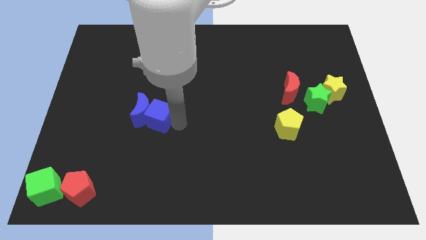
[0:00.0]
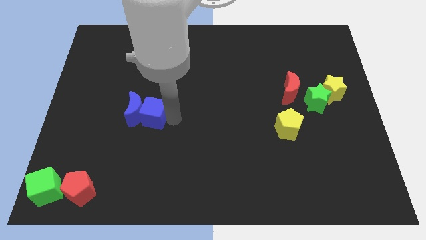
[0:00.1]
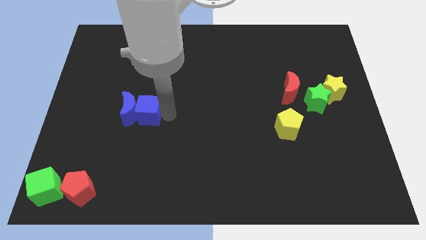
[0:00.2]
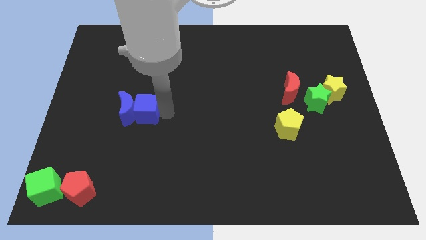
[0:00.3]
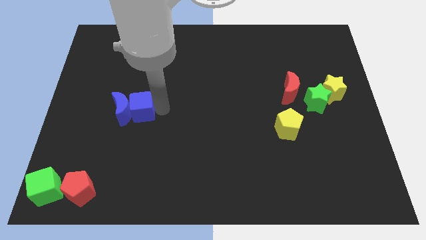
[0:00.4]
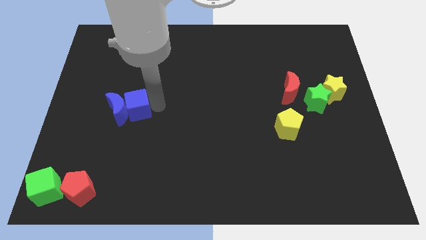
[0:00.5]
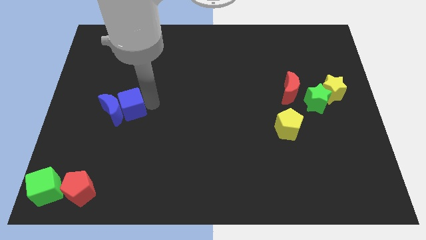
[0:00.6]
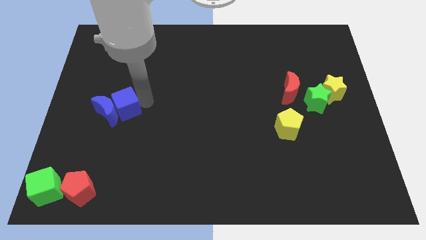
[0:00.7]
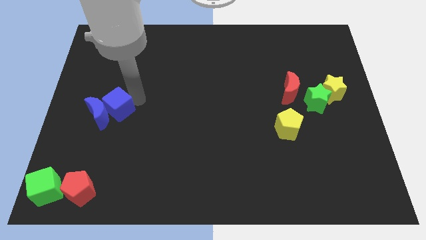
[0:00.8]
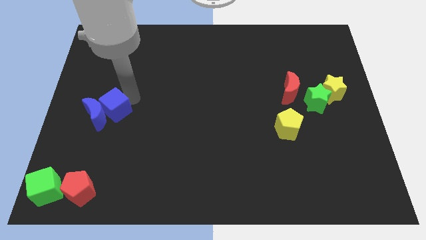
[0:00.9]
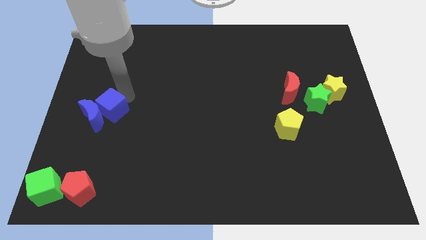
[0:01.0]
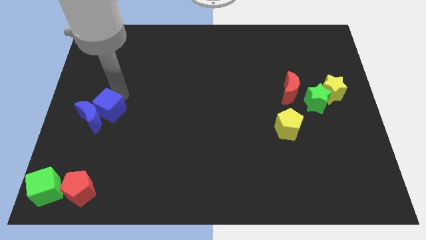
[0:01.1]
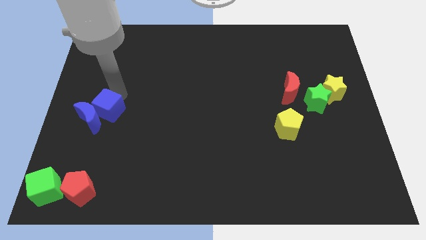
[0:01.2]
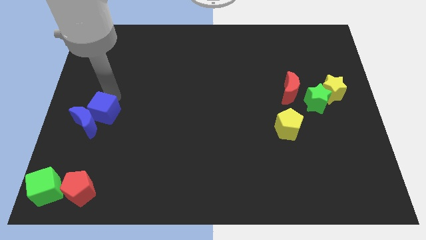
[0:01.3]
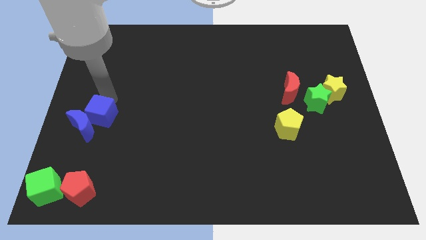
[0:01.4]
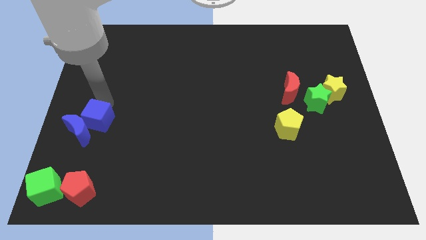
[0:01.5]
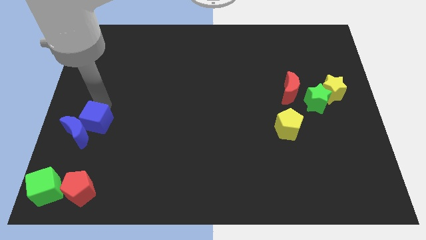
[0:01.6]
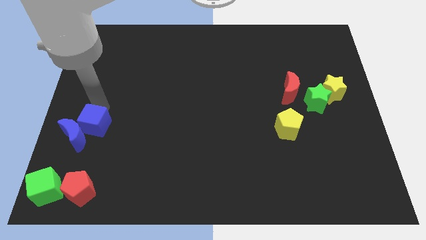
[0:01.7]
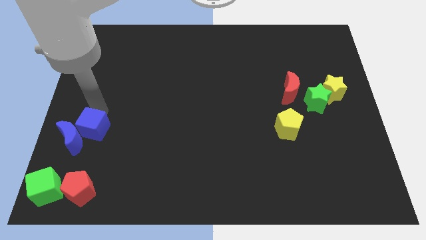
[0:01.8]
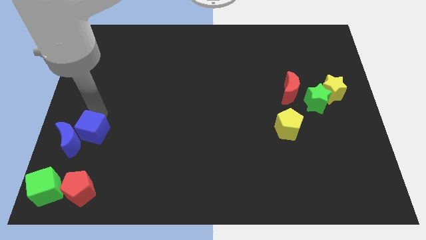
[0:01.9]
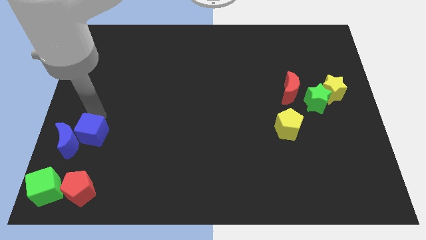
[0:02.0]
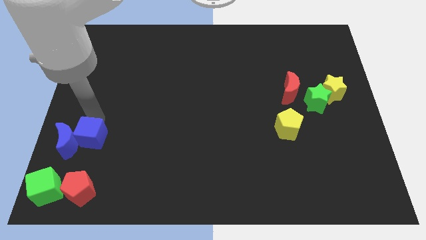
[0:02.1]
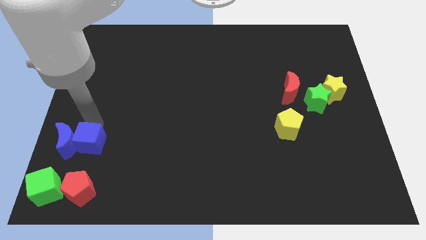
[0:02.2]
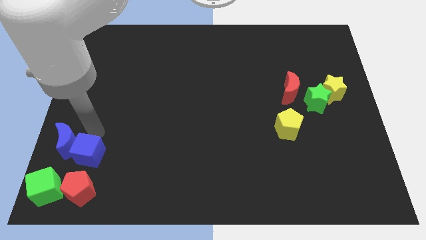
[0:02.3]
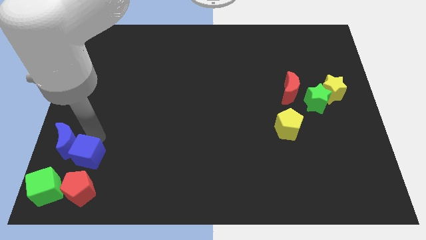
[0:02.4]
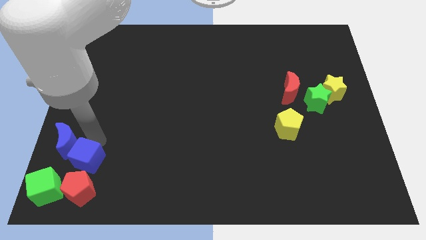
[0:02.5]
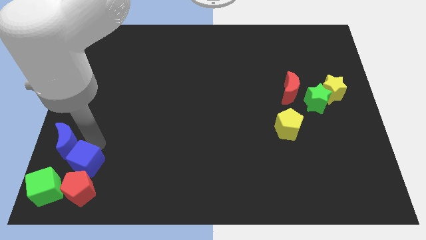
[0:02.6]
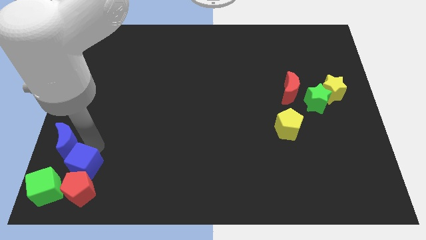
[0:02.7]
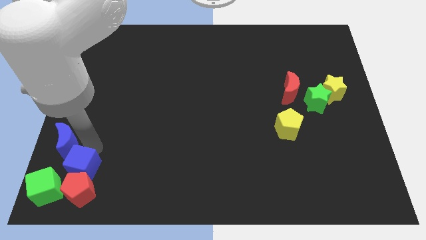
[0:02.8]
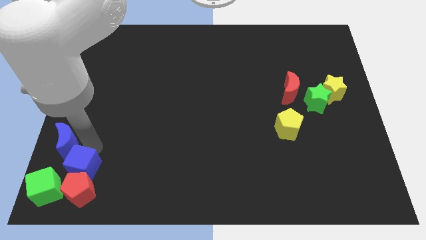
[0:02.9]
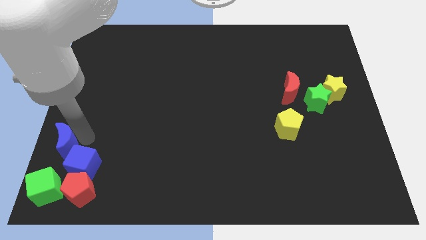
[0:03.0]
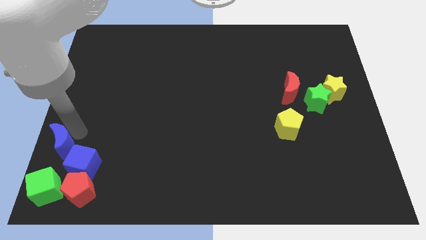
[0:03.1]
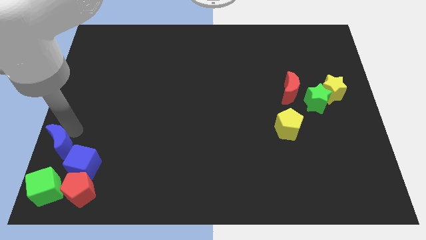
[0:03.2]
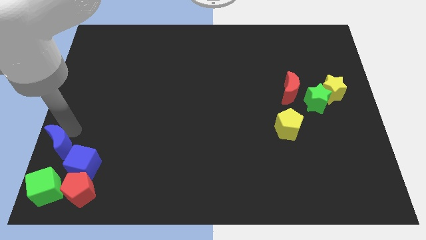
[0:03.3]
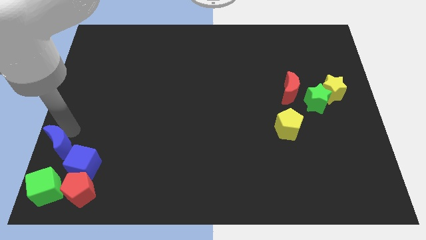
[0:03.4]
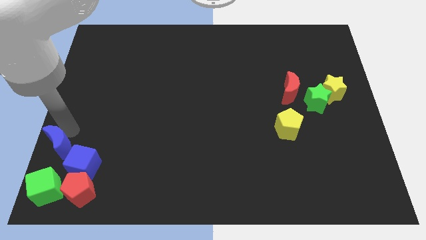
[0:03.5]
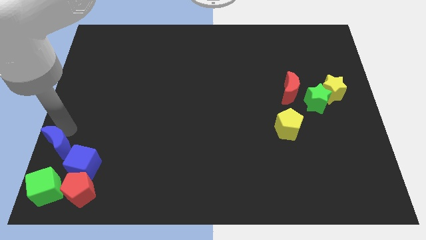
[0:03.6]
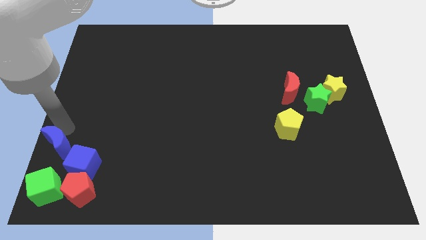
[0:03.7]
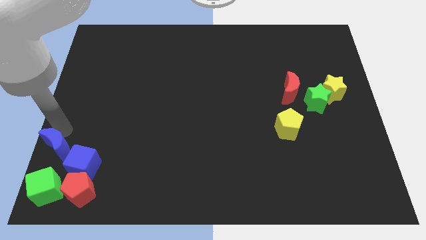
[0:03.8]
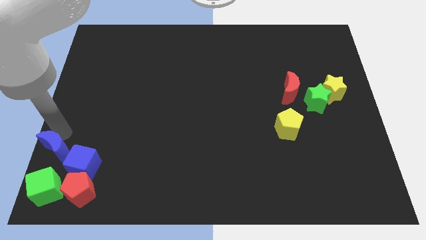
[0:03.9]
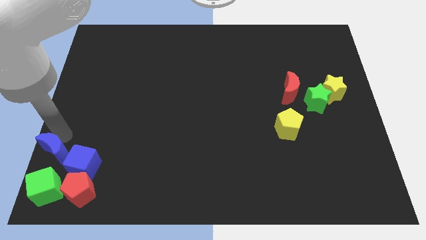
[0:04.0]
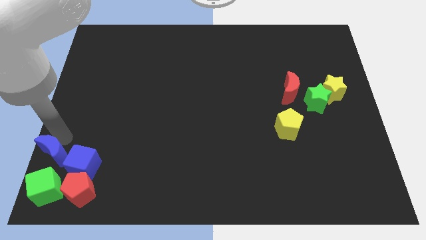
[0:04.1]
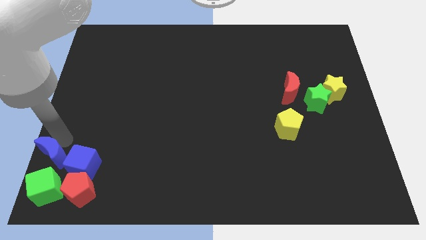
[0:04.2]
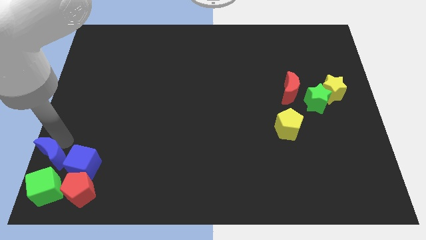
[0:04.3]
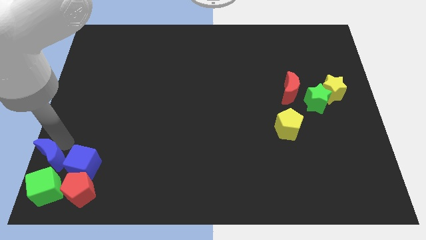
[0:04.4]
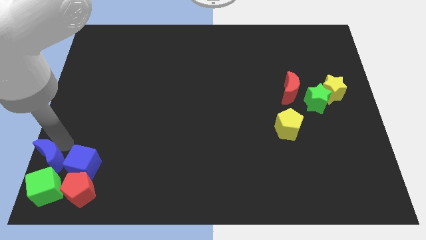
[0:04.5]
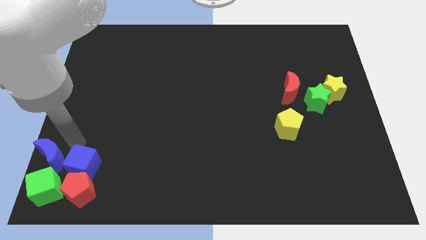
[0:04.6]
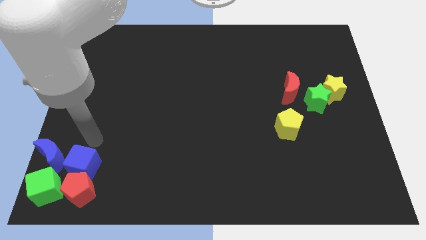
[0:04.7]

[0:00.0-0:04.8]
move the blue blocks to the top of the red pentagon and green cube

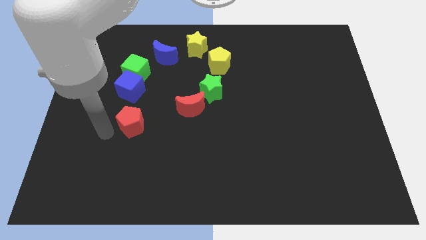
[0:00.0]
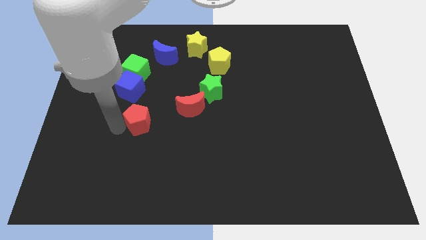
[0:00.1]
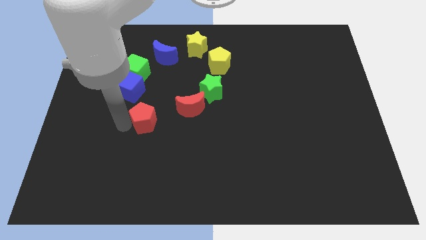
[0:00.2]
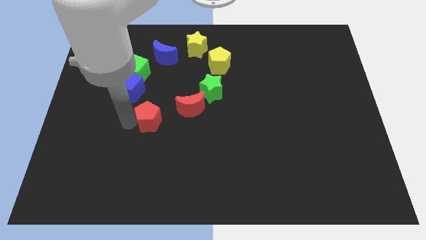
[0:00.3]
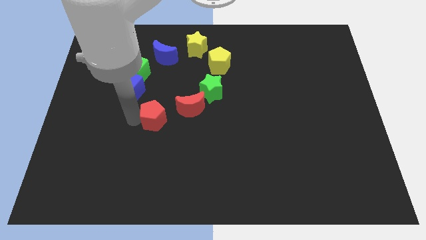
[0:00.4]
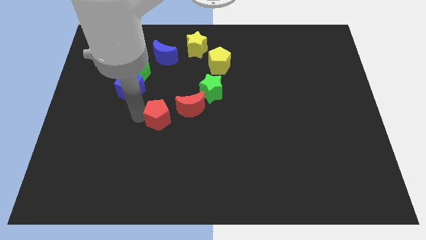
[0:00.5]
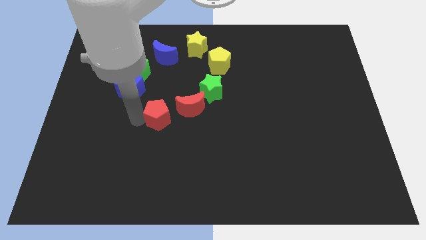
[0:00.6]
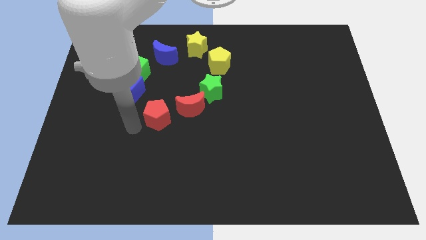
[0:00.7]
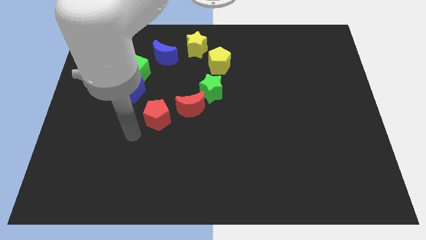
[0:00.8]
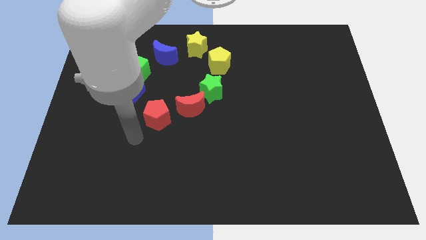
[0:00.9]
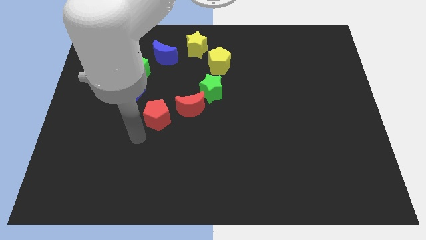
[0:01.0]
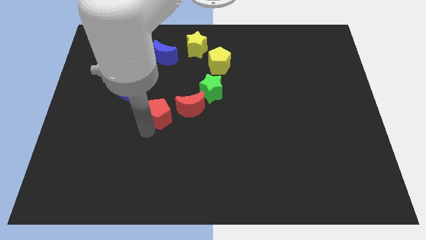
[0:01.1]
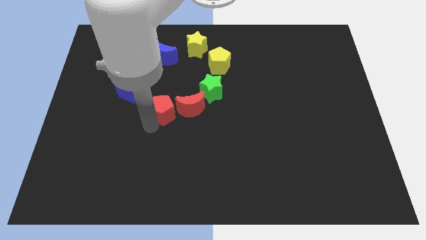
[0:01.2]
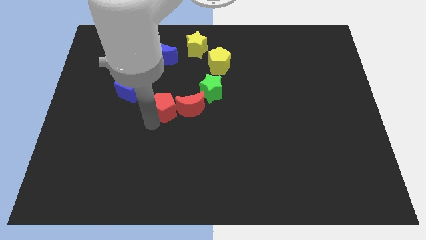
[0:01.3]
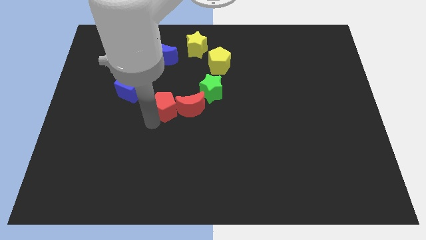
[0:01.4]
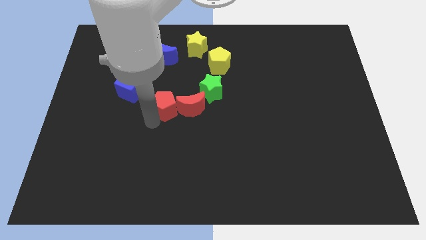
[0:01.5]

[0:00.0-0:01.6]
slide the red pentagon parallel left to the red moon

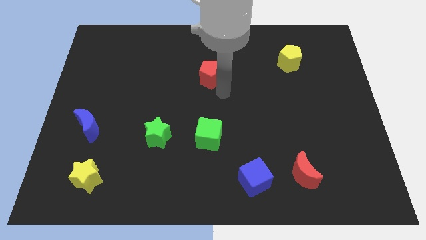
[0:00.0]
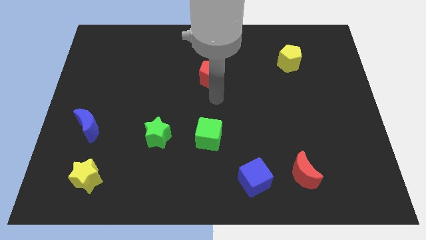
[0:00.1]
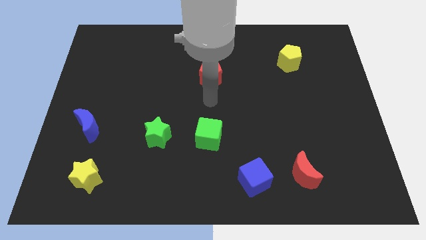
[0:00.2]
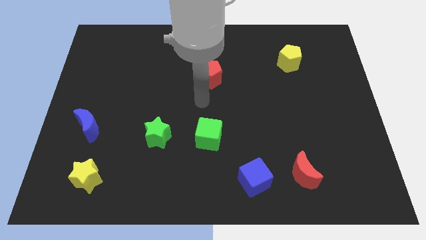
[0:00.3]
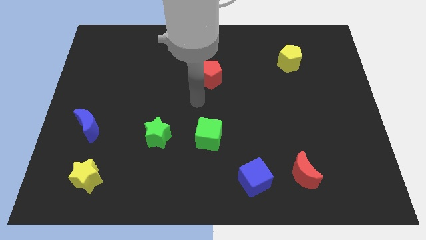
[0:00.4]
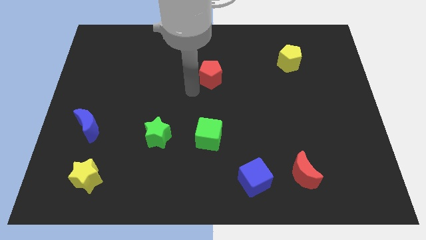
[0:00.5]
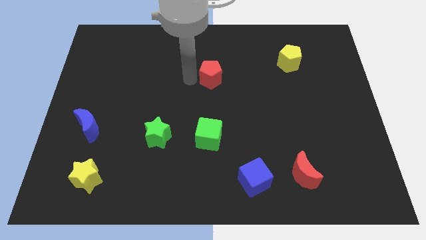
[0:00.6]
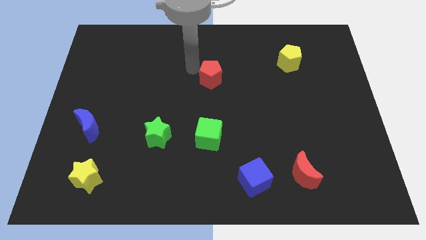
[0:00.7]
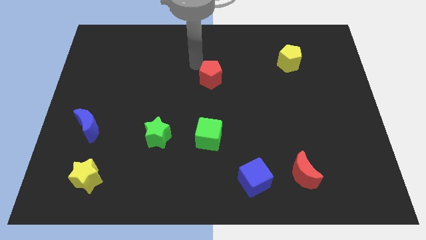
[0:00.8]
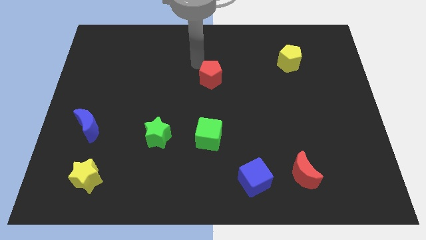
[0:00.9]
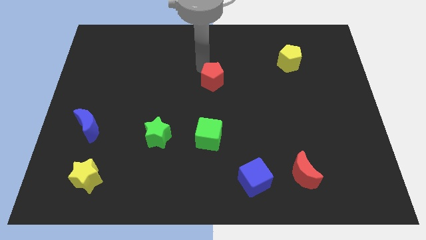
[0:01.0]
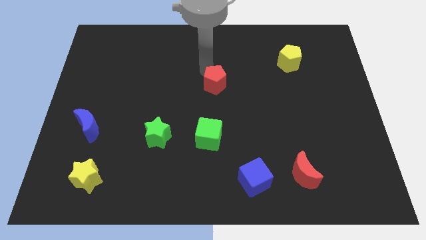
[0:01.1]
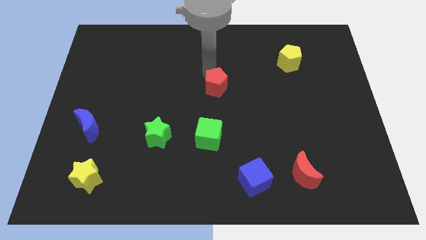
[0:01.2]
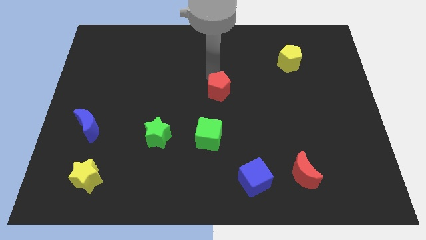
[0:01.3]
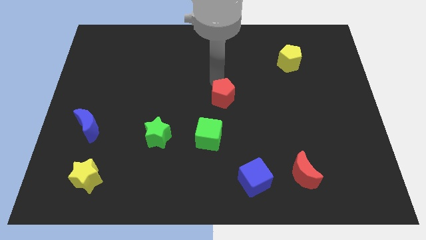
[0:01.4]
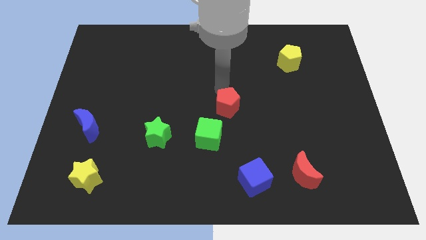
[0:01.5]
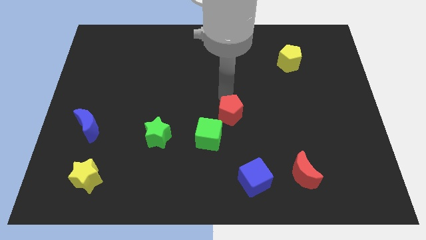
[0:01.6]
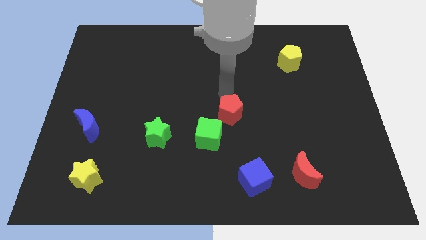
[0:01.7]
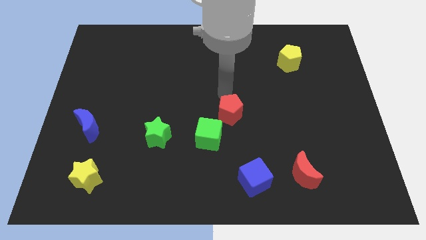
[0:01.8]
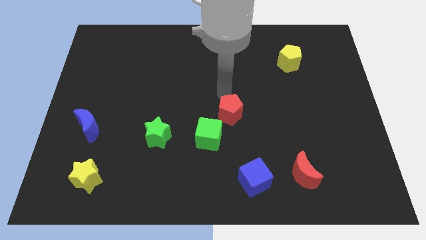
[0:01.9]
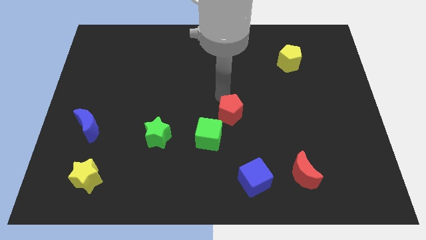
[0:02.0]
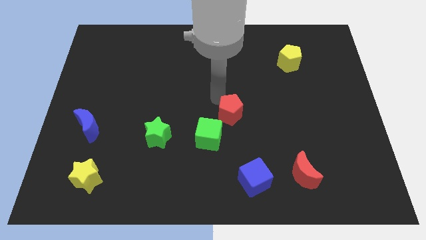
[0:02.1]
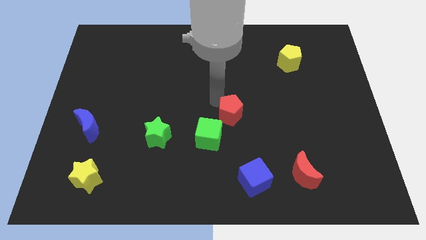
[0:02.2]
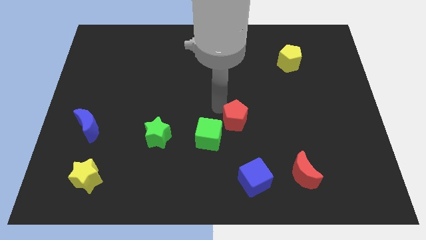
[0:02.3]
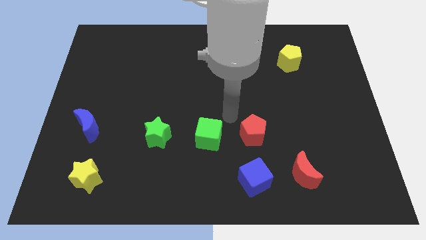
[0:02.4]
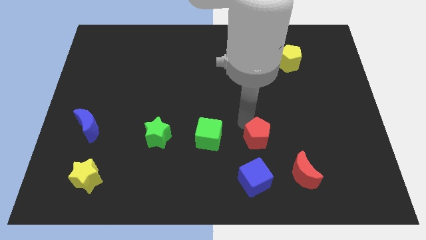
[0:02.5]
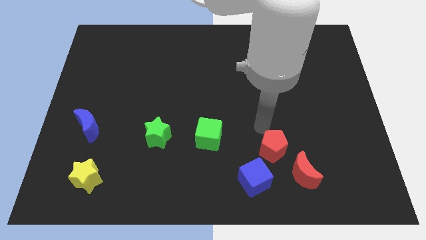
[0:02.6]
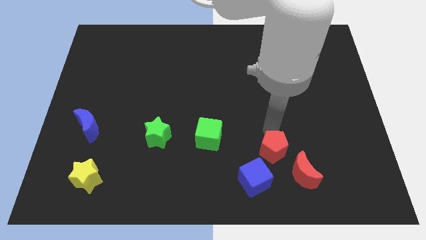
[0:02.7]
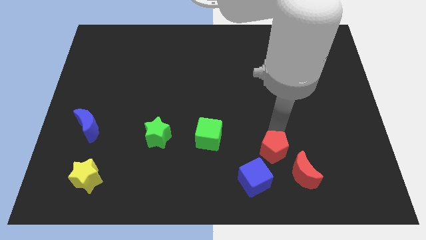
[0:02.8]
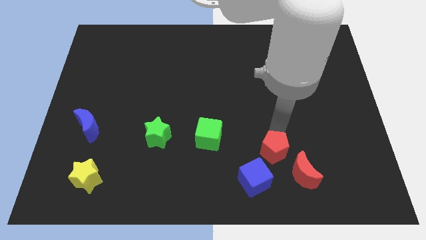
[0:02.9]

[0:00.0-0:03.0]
move the red pentagon diagonal above the blue cube
